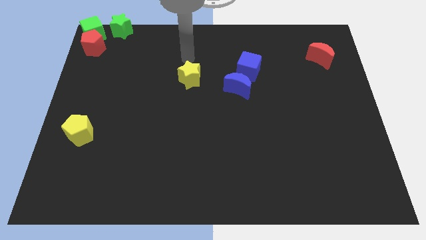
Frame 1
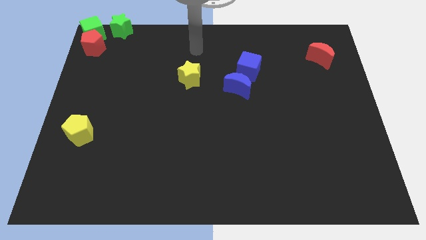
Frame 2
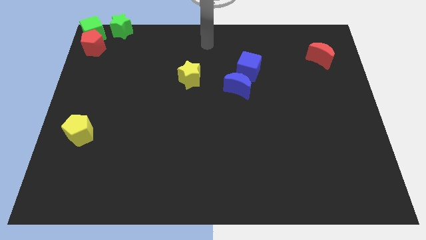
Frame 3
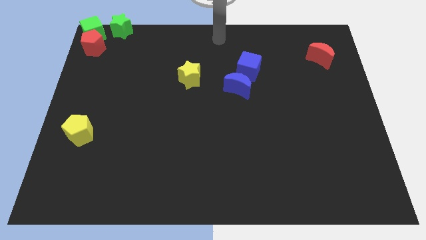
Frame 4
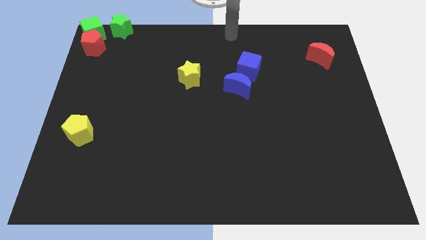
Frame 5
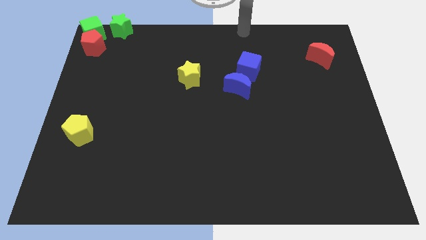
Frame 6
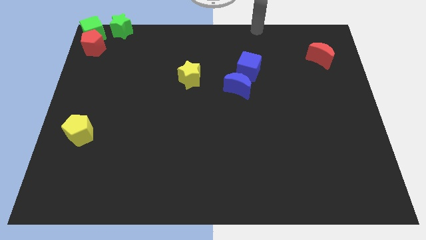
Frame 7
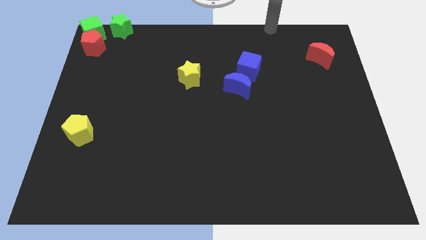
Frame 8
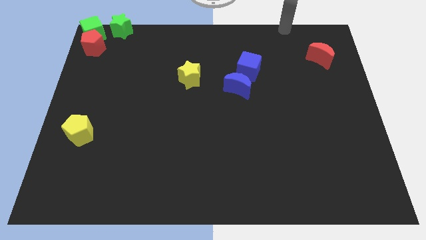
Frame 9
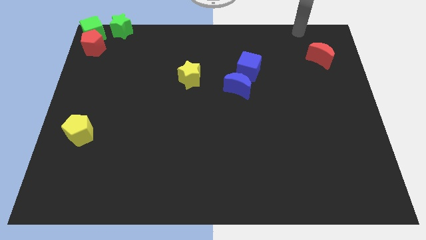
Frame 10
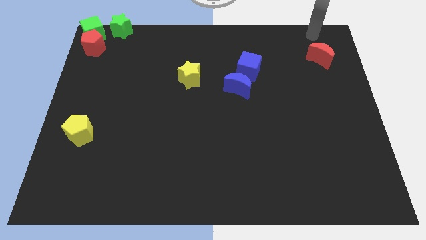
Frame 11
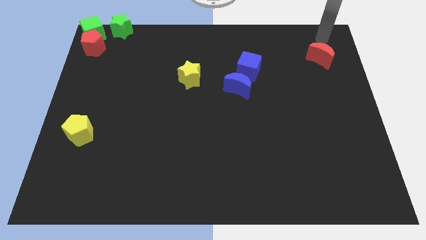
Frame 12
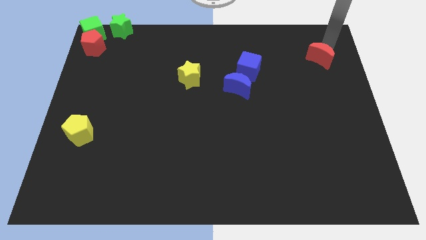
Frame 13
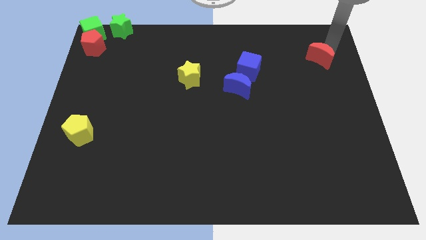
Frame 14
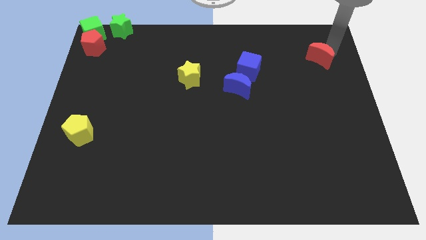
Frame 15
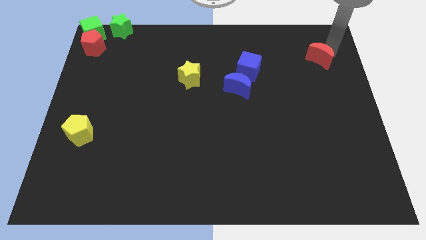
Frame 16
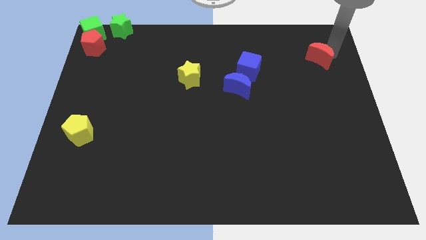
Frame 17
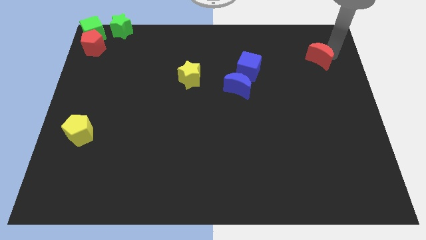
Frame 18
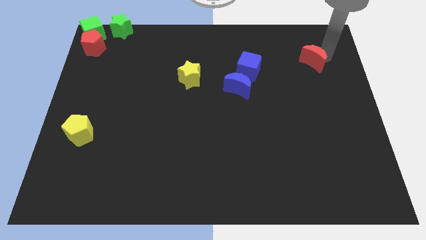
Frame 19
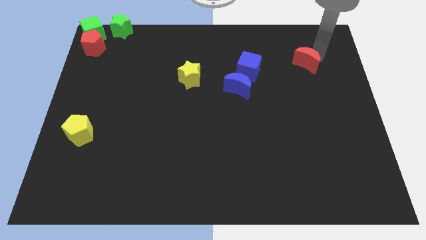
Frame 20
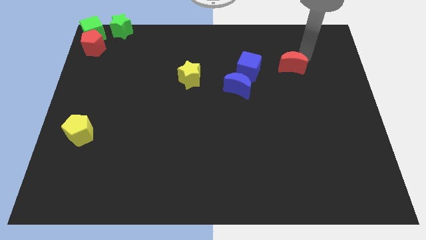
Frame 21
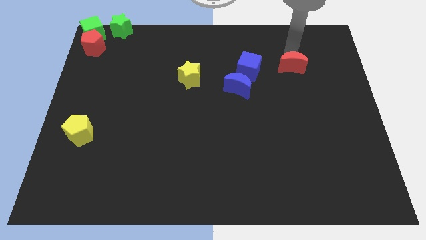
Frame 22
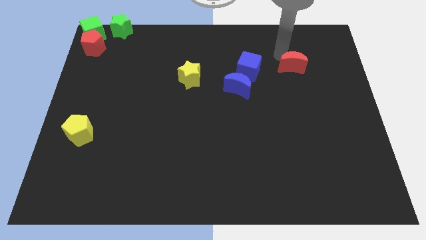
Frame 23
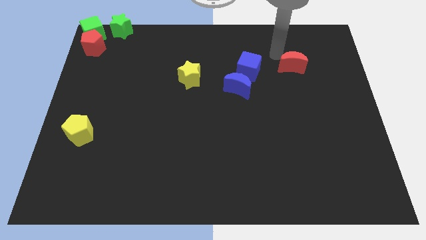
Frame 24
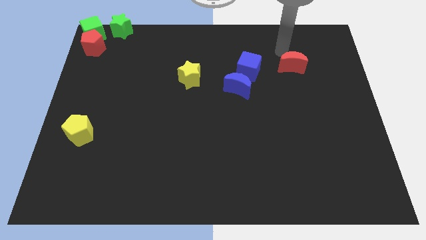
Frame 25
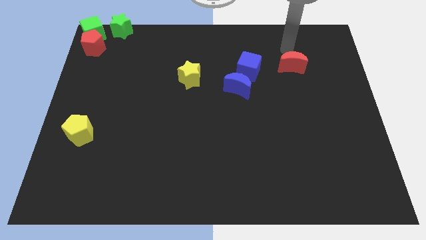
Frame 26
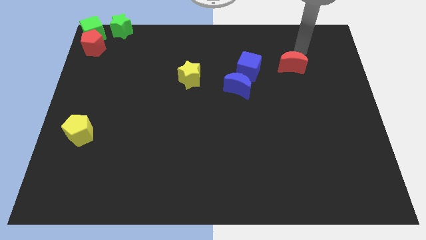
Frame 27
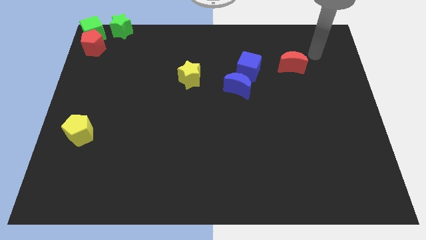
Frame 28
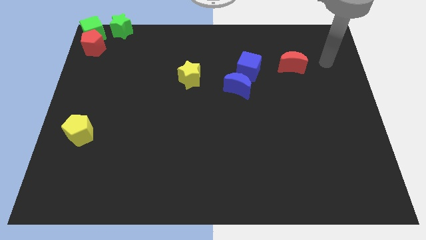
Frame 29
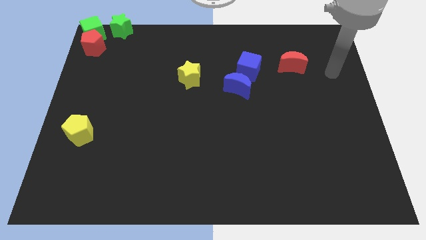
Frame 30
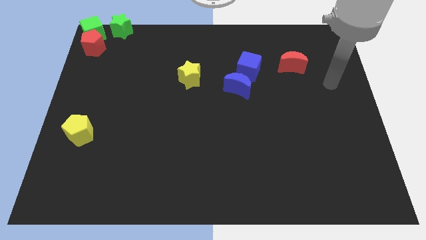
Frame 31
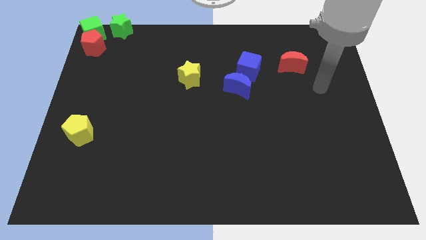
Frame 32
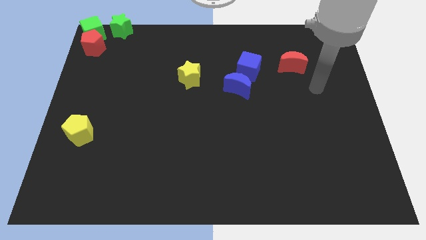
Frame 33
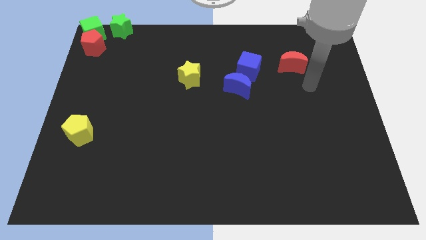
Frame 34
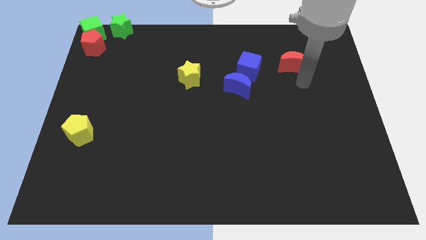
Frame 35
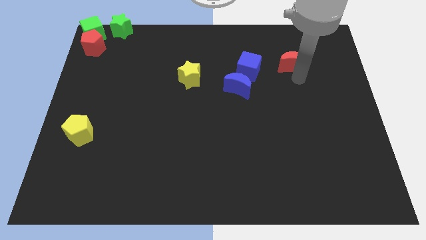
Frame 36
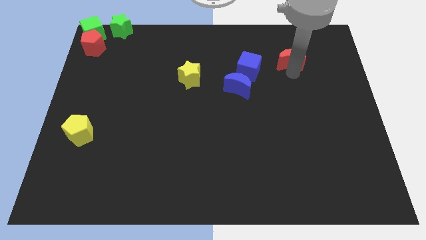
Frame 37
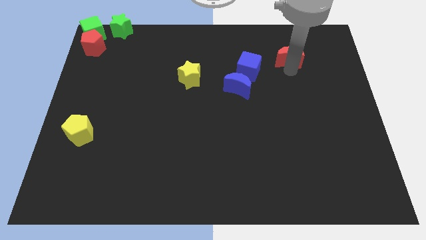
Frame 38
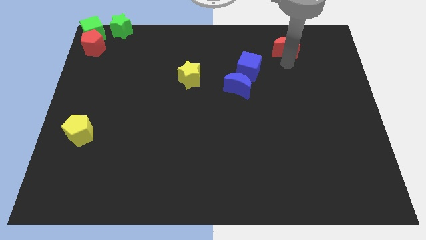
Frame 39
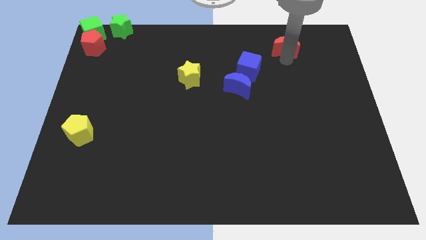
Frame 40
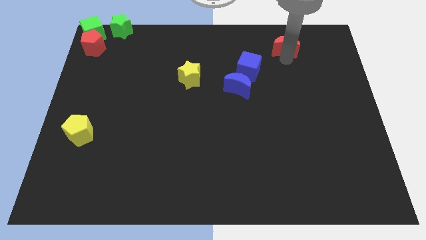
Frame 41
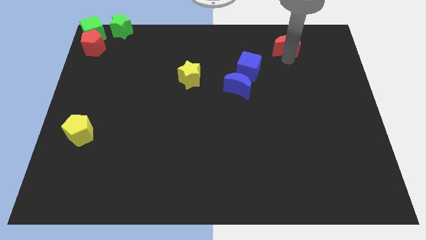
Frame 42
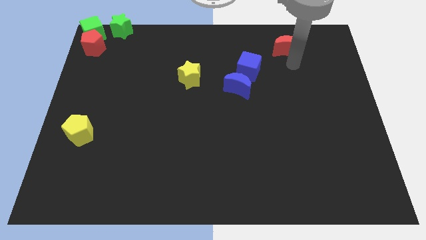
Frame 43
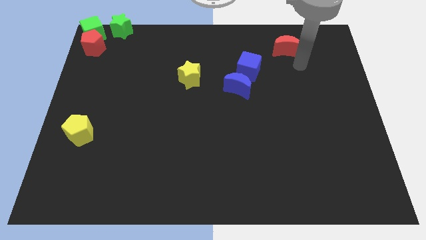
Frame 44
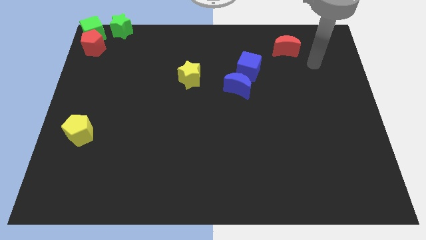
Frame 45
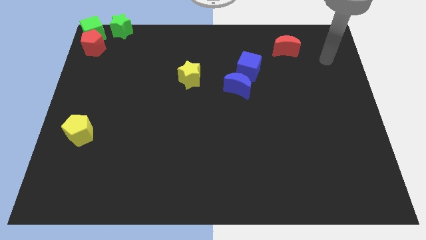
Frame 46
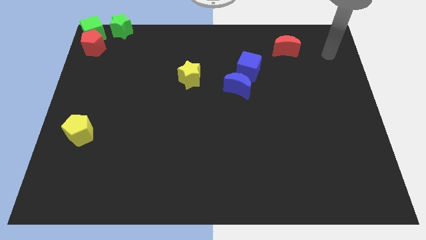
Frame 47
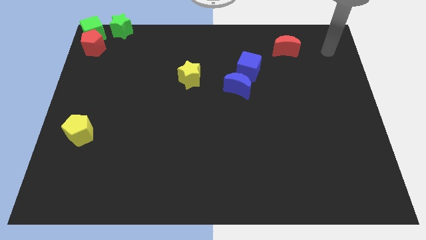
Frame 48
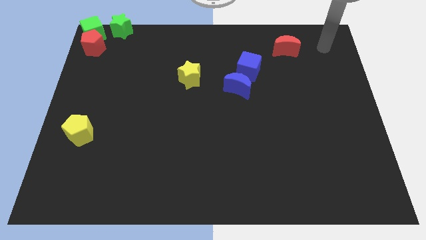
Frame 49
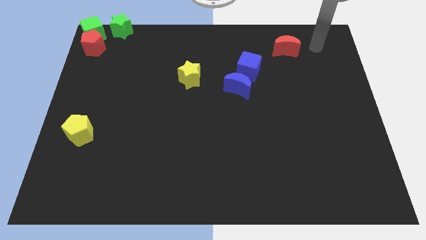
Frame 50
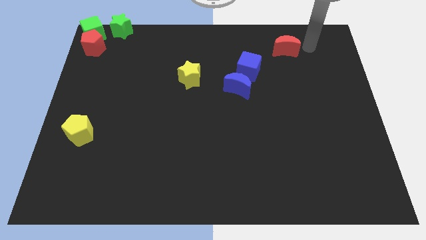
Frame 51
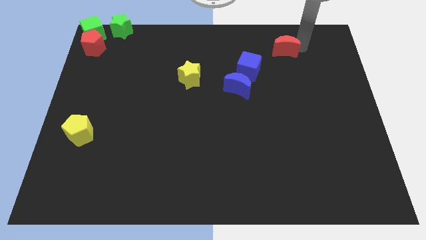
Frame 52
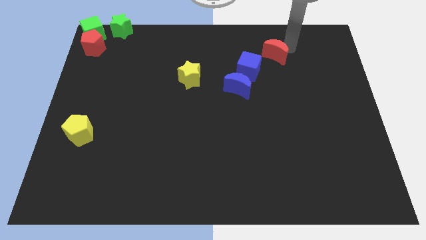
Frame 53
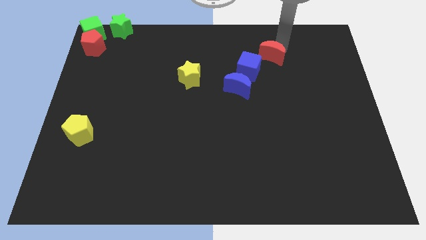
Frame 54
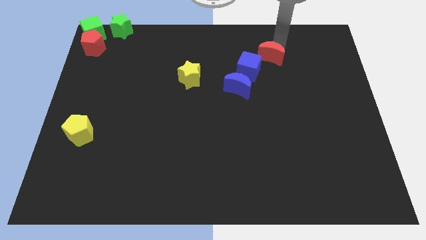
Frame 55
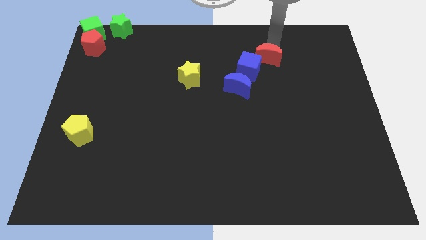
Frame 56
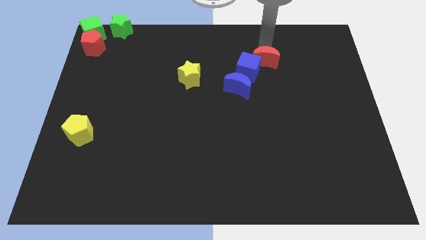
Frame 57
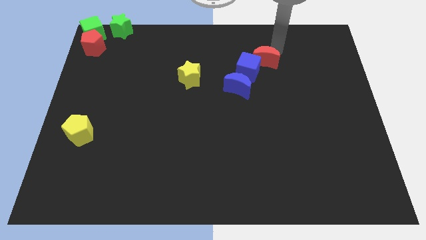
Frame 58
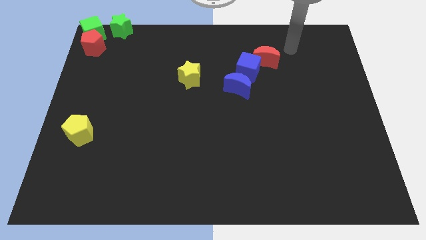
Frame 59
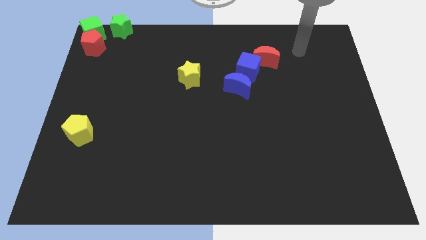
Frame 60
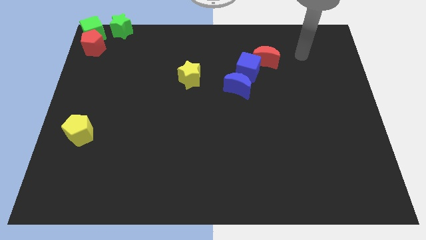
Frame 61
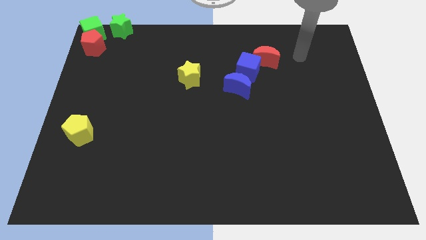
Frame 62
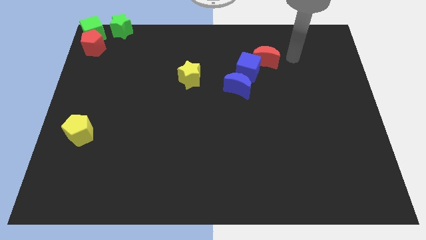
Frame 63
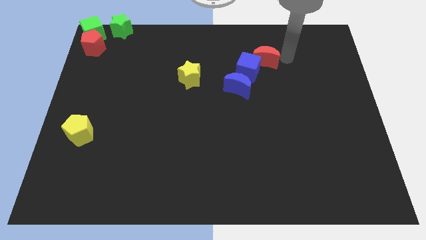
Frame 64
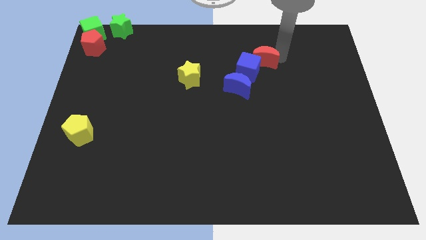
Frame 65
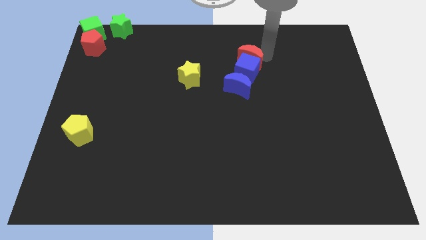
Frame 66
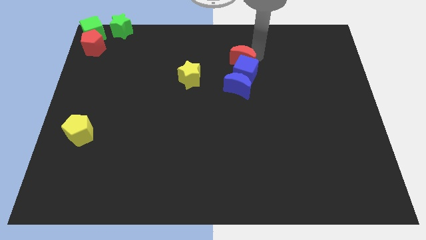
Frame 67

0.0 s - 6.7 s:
move the red crescent to the top of the blue cube

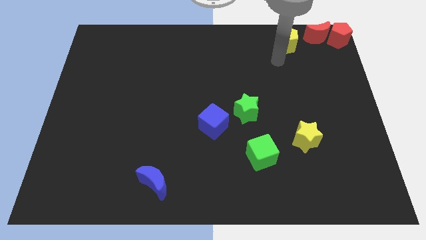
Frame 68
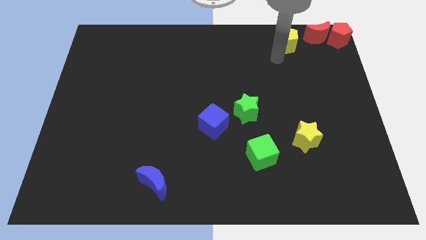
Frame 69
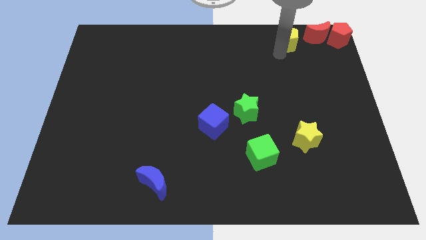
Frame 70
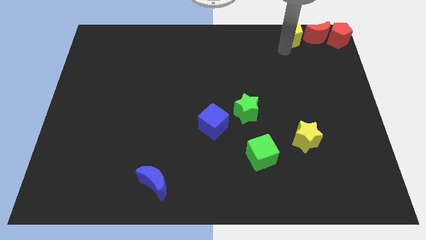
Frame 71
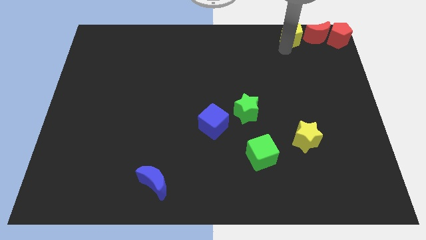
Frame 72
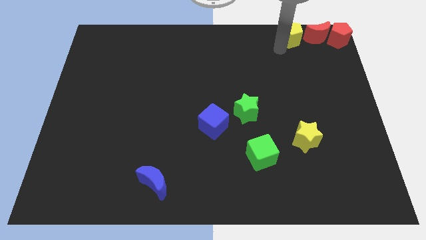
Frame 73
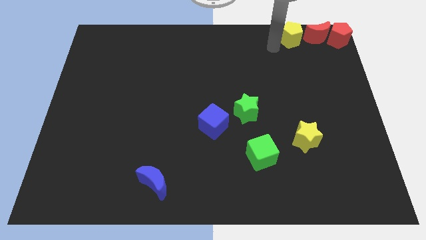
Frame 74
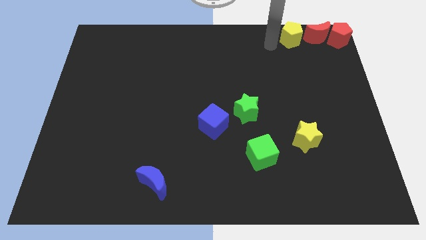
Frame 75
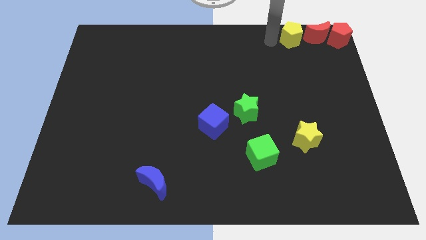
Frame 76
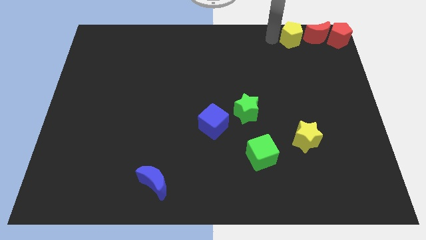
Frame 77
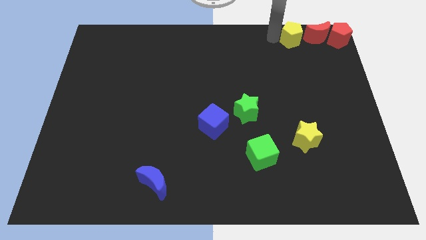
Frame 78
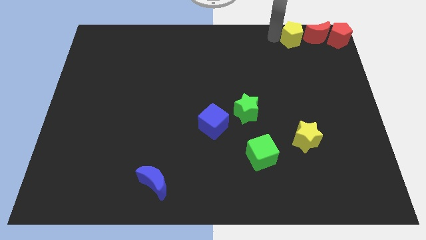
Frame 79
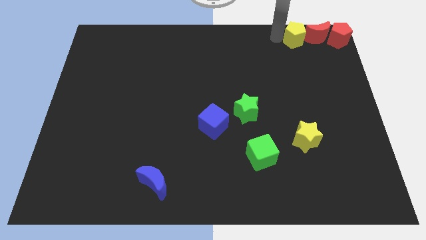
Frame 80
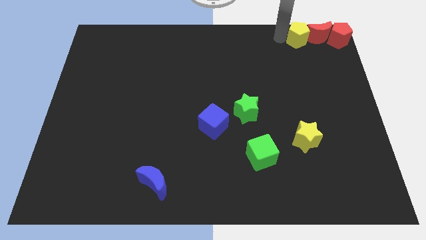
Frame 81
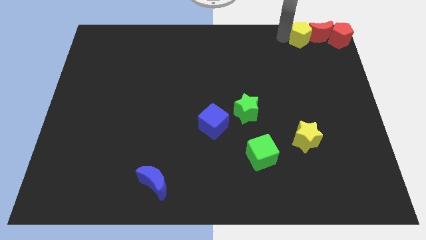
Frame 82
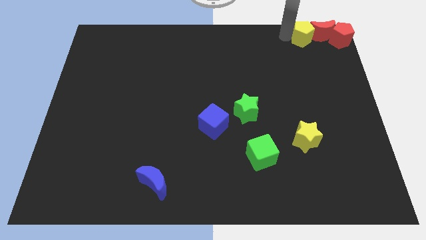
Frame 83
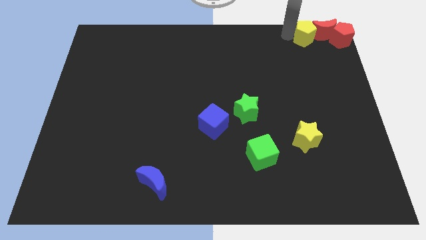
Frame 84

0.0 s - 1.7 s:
push the yellow pentagon into the red crescent

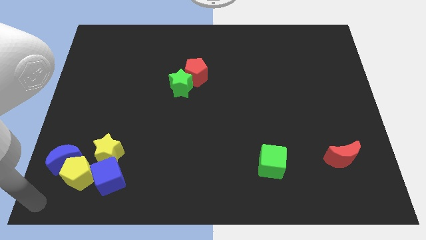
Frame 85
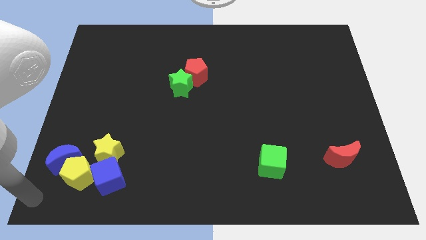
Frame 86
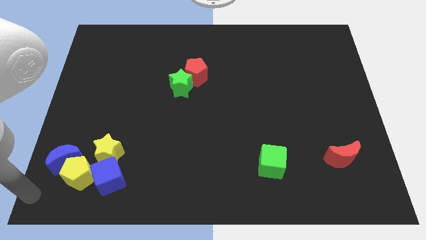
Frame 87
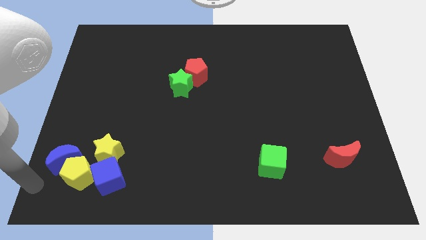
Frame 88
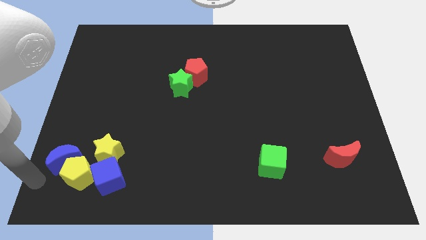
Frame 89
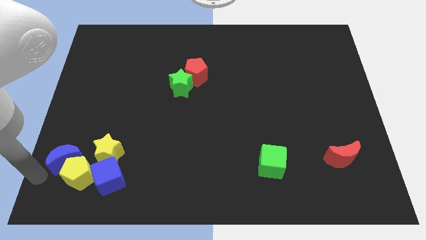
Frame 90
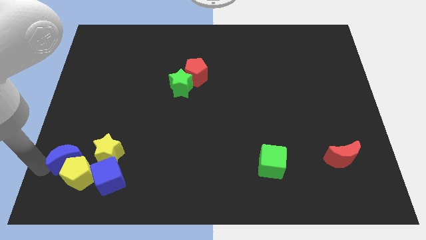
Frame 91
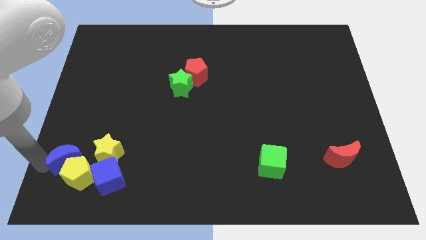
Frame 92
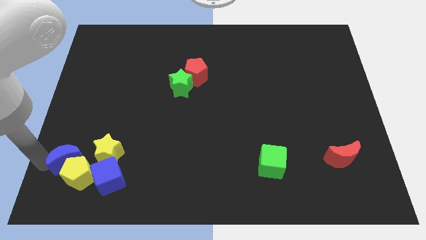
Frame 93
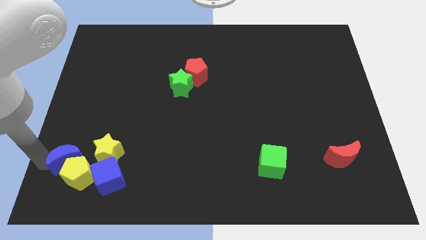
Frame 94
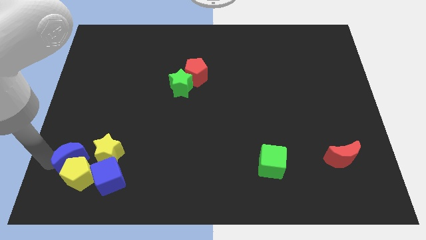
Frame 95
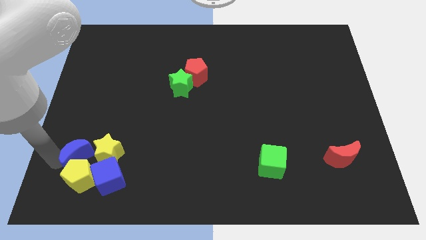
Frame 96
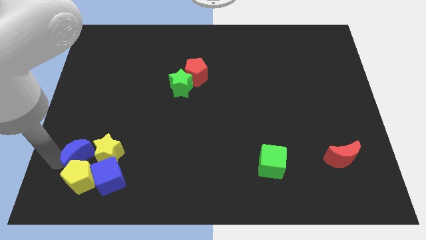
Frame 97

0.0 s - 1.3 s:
place your arm below the blue crescent
